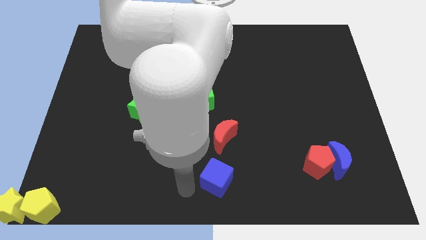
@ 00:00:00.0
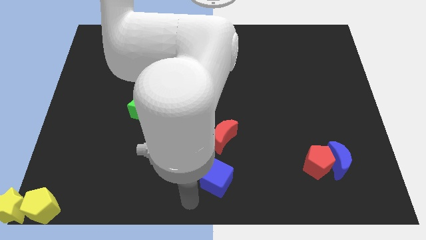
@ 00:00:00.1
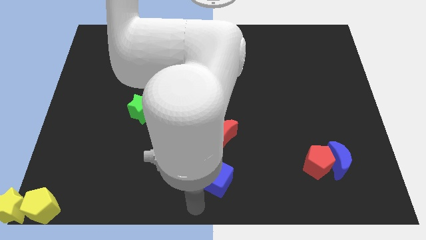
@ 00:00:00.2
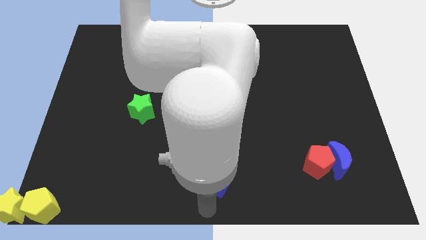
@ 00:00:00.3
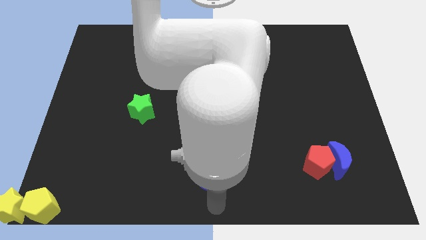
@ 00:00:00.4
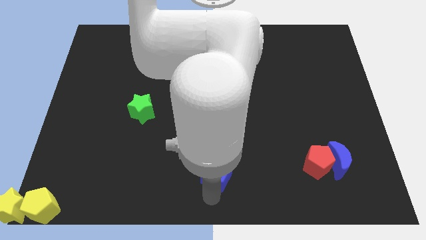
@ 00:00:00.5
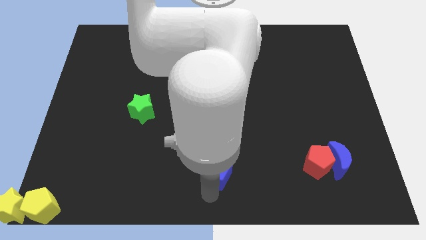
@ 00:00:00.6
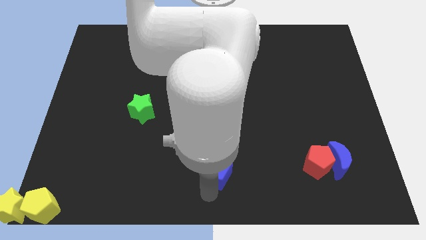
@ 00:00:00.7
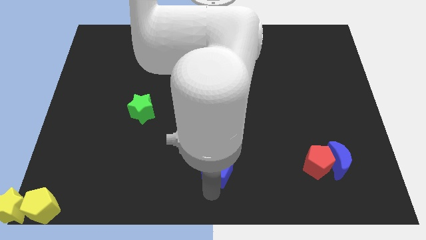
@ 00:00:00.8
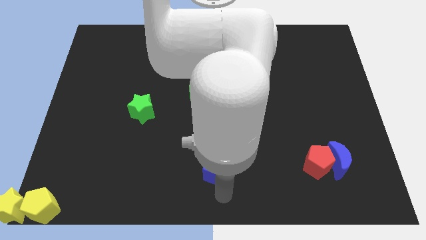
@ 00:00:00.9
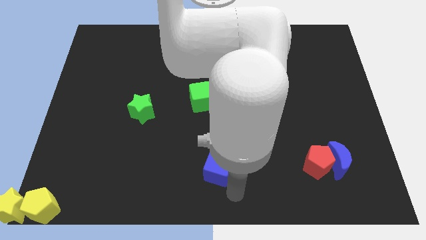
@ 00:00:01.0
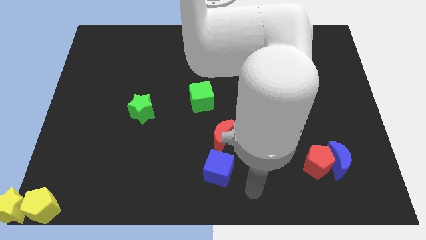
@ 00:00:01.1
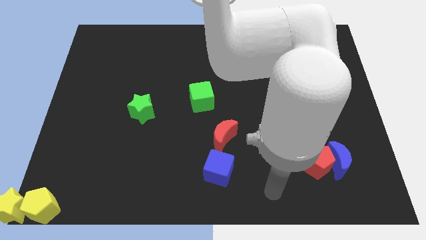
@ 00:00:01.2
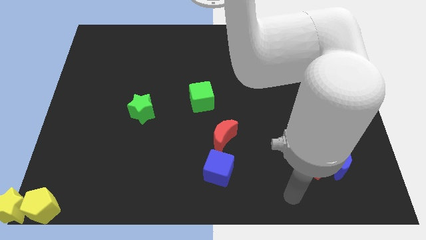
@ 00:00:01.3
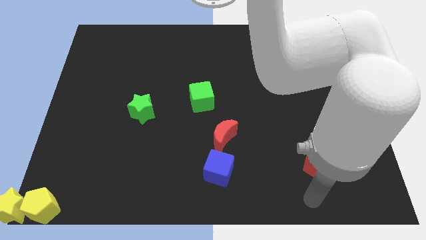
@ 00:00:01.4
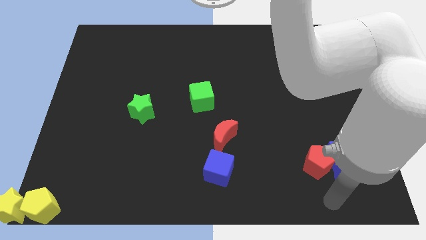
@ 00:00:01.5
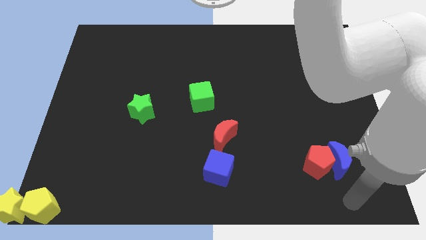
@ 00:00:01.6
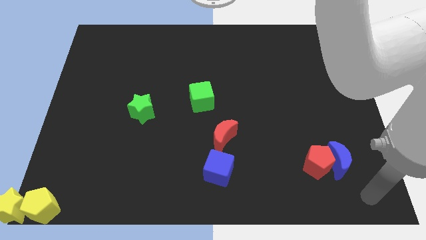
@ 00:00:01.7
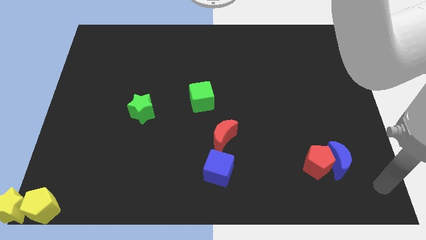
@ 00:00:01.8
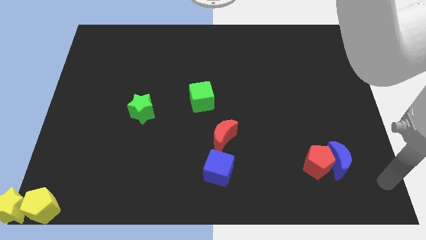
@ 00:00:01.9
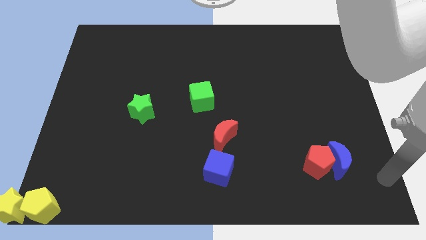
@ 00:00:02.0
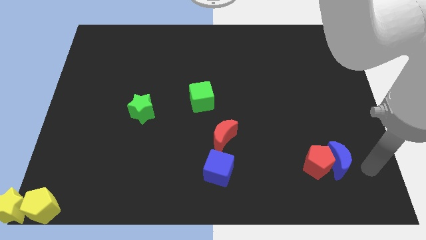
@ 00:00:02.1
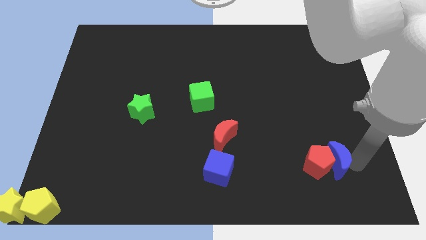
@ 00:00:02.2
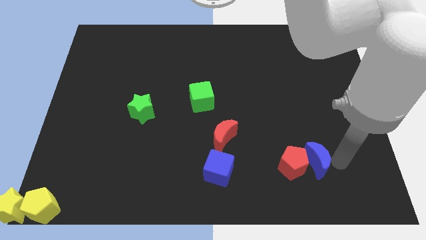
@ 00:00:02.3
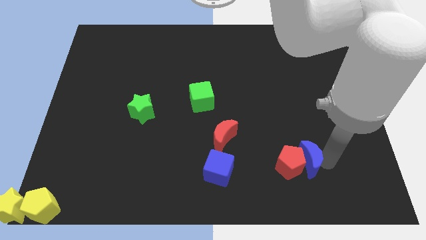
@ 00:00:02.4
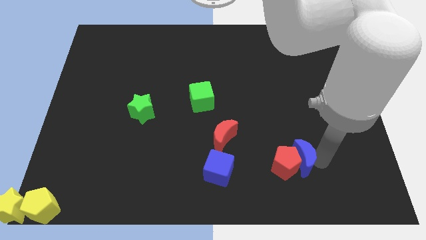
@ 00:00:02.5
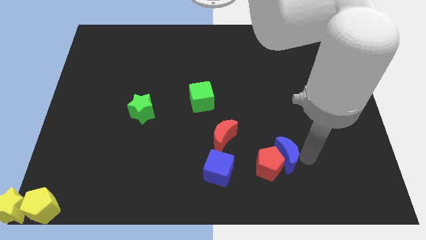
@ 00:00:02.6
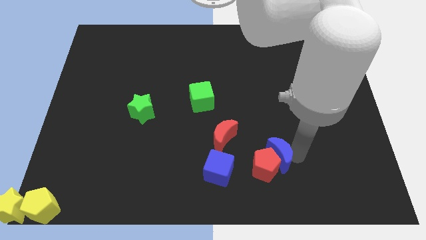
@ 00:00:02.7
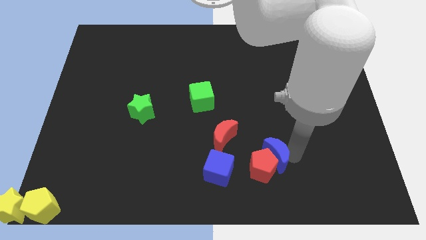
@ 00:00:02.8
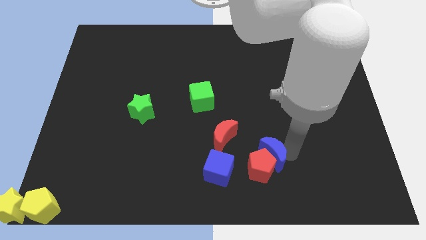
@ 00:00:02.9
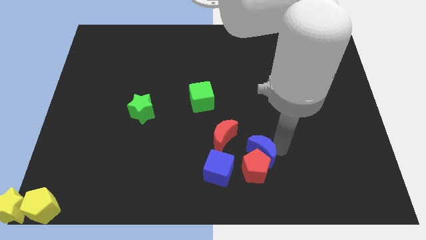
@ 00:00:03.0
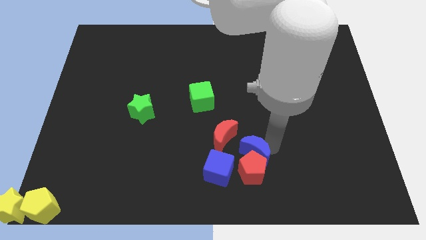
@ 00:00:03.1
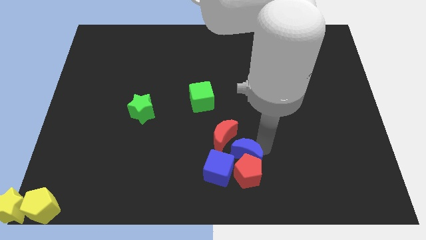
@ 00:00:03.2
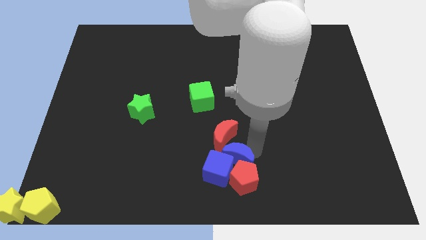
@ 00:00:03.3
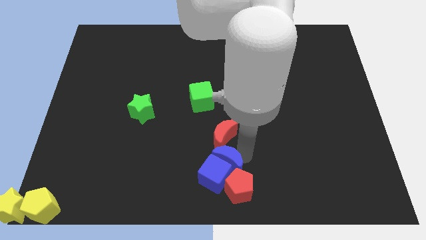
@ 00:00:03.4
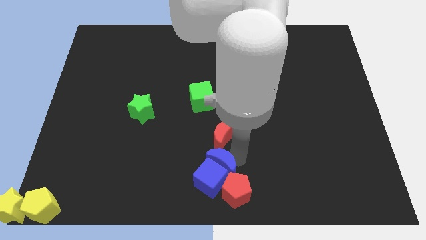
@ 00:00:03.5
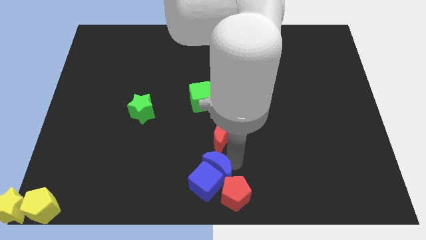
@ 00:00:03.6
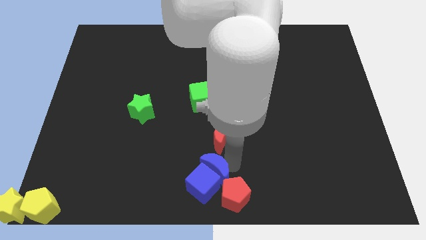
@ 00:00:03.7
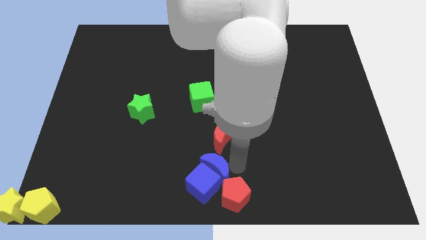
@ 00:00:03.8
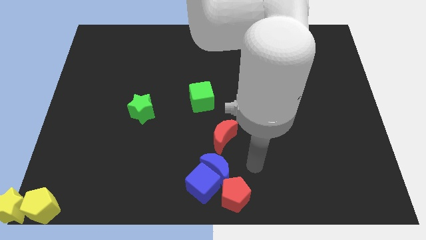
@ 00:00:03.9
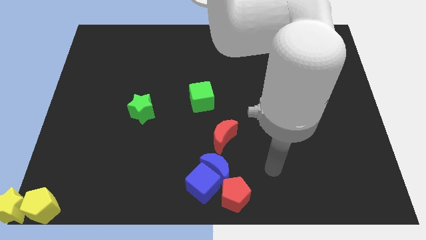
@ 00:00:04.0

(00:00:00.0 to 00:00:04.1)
push the blue moon and red pentagon into blue cube

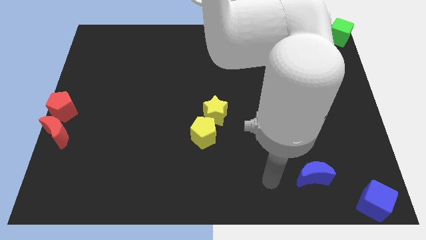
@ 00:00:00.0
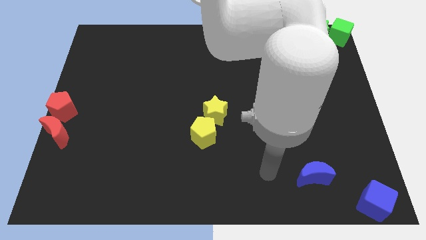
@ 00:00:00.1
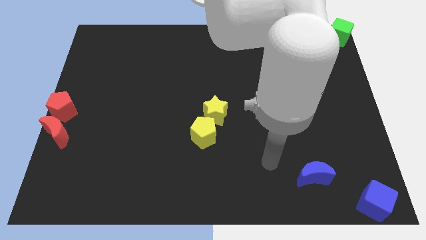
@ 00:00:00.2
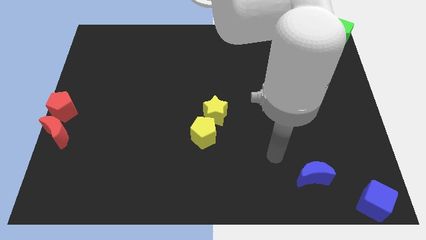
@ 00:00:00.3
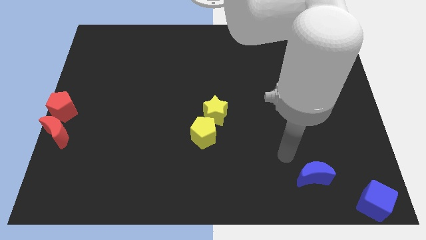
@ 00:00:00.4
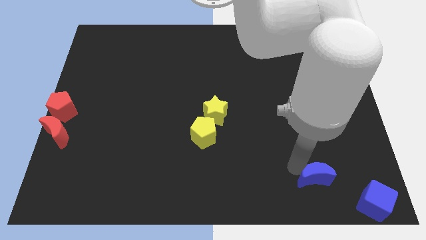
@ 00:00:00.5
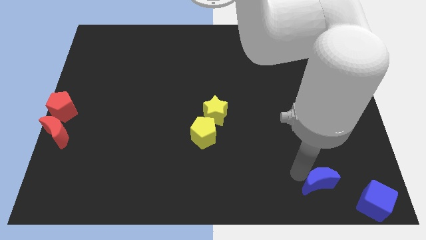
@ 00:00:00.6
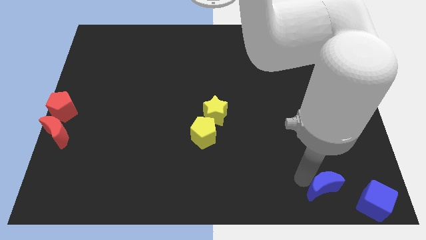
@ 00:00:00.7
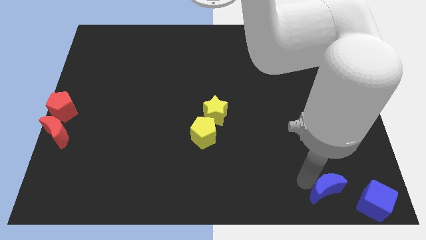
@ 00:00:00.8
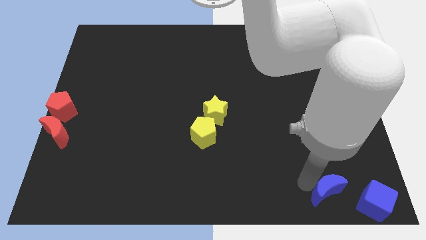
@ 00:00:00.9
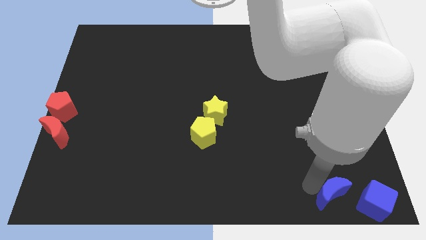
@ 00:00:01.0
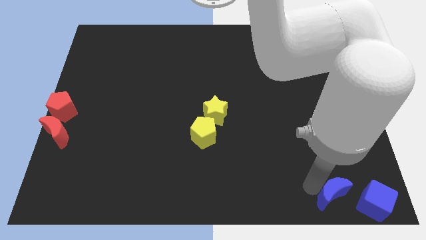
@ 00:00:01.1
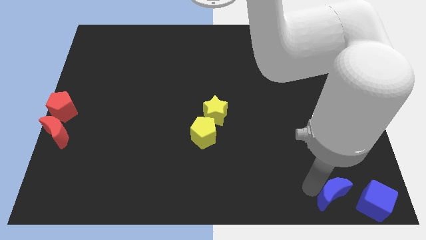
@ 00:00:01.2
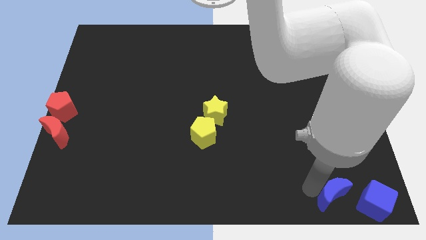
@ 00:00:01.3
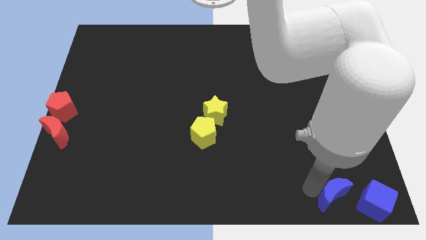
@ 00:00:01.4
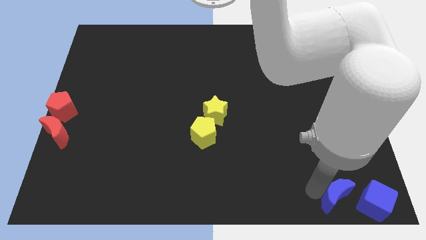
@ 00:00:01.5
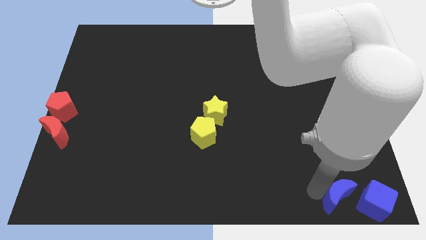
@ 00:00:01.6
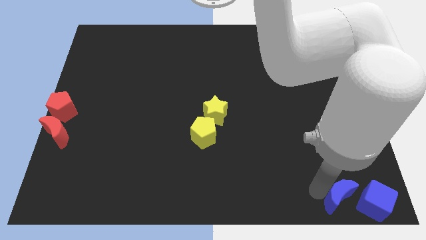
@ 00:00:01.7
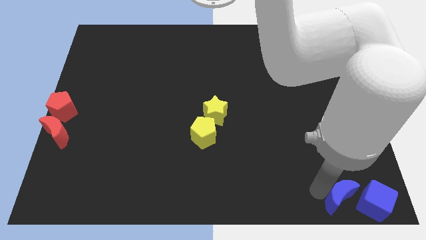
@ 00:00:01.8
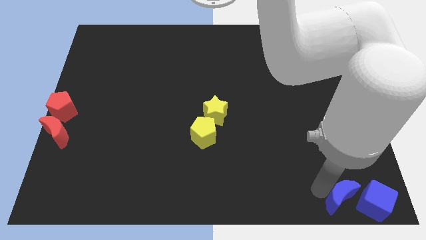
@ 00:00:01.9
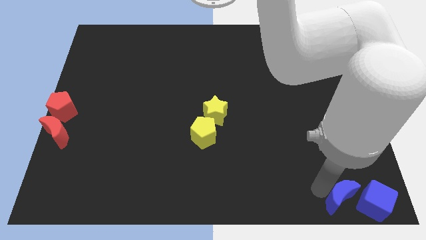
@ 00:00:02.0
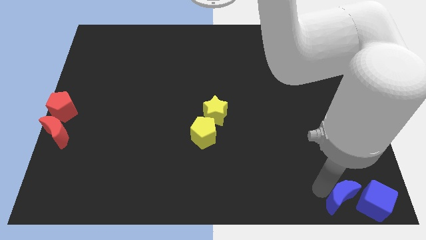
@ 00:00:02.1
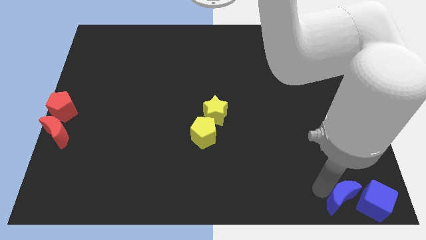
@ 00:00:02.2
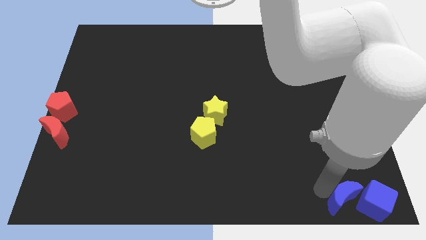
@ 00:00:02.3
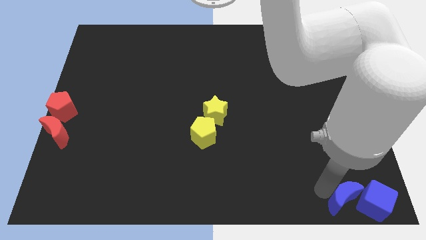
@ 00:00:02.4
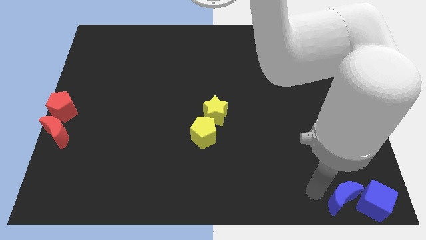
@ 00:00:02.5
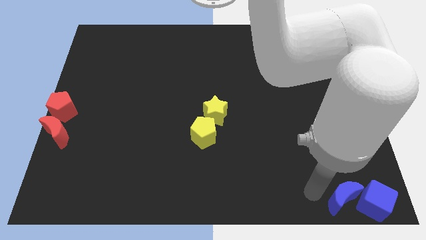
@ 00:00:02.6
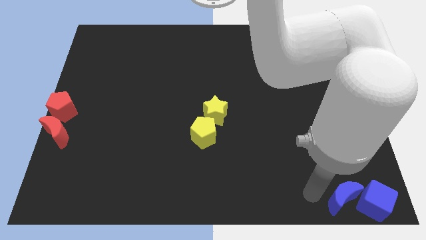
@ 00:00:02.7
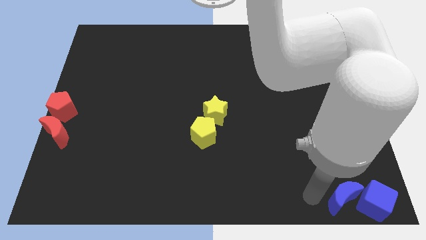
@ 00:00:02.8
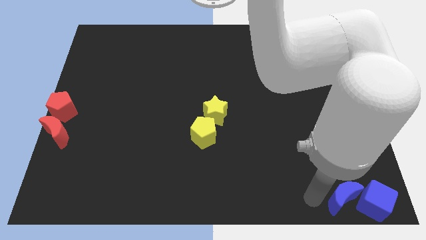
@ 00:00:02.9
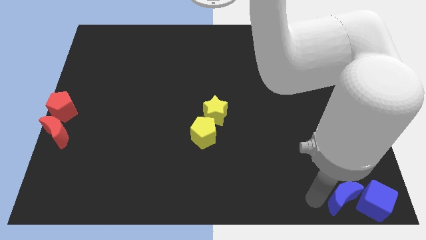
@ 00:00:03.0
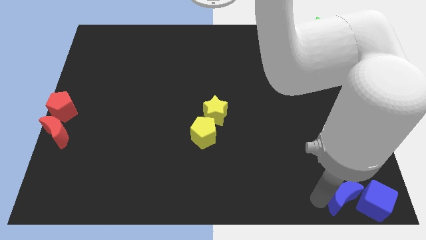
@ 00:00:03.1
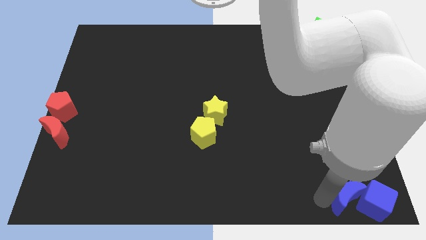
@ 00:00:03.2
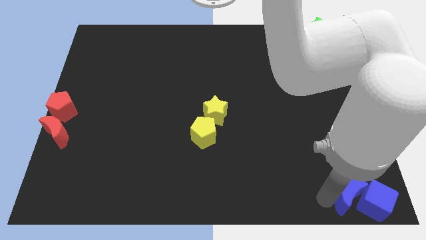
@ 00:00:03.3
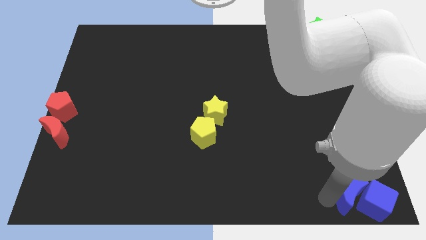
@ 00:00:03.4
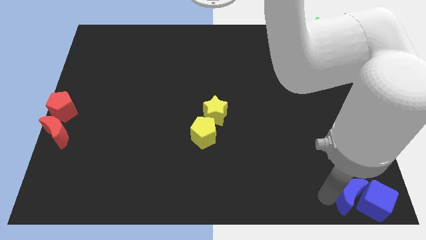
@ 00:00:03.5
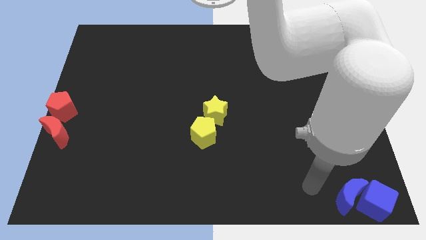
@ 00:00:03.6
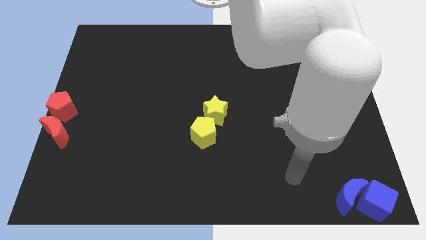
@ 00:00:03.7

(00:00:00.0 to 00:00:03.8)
put the blue blocks together

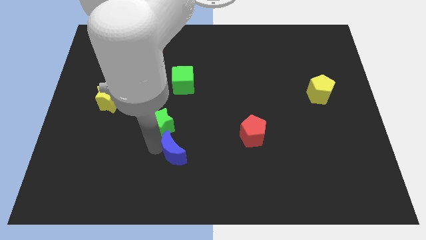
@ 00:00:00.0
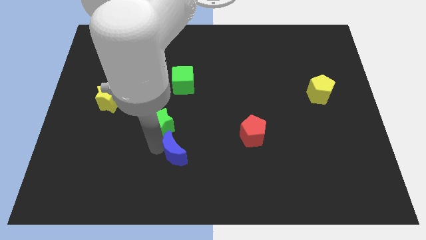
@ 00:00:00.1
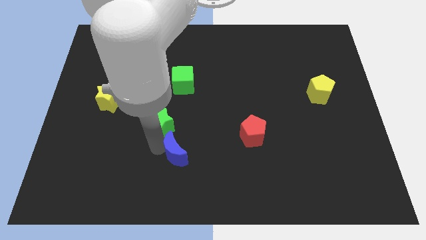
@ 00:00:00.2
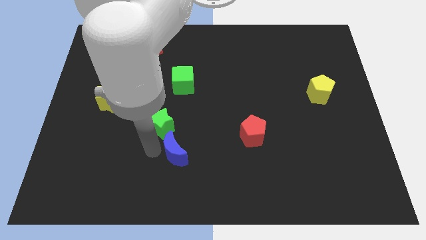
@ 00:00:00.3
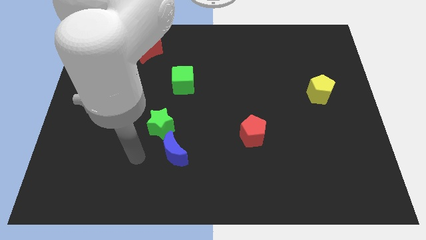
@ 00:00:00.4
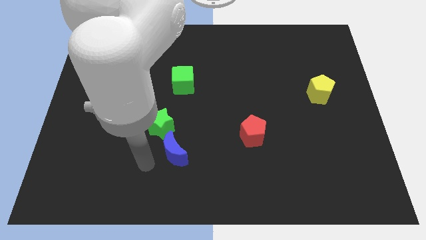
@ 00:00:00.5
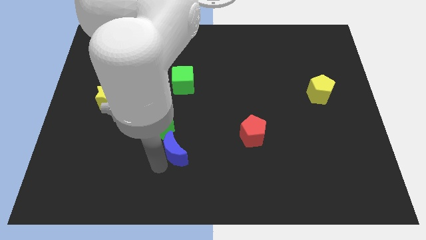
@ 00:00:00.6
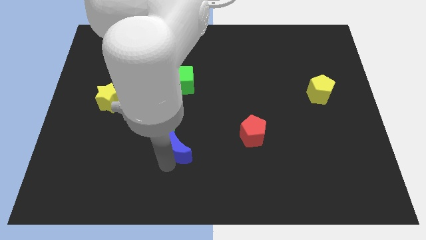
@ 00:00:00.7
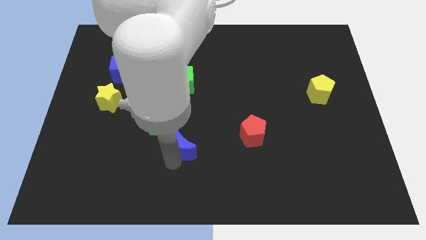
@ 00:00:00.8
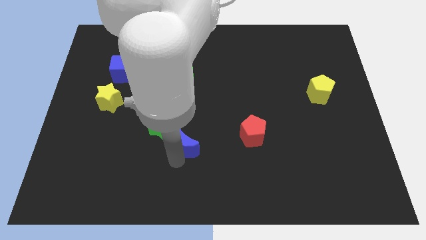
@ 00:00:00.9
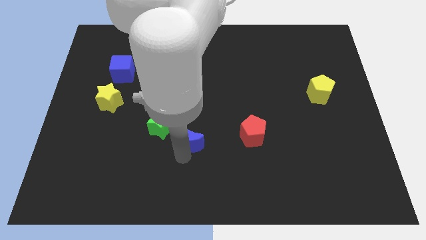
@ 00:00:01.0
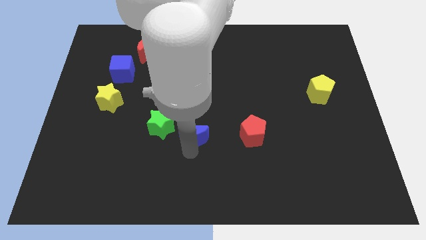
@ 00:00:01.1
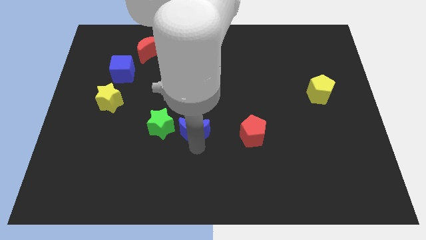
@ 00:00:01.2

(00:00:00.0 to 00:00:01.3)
move blue crescent to the right of the green star
